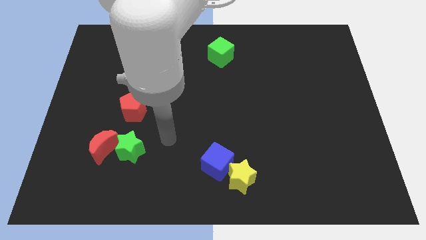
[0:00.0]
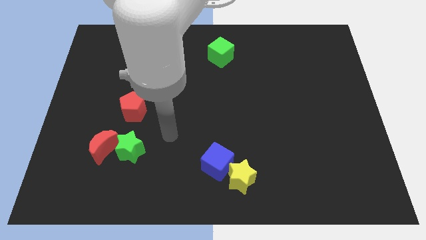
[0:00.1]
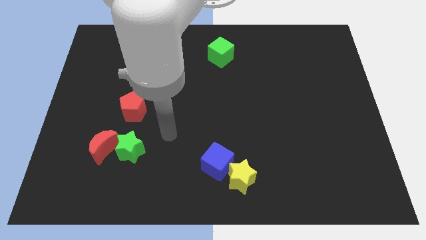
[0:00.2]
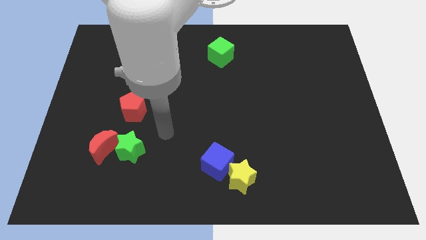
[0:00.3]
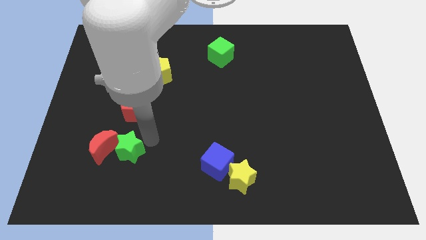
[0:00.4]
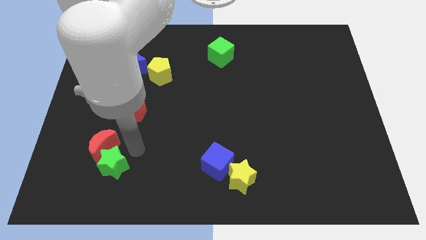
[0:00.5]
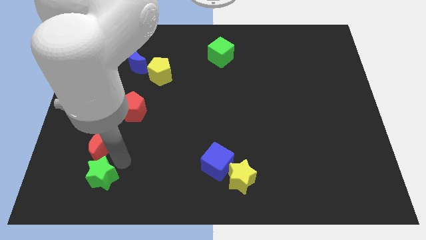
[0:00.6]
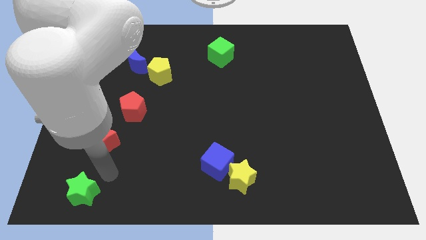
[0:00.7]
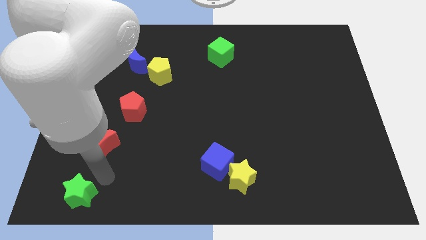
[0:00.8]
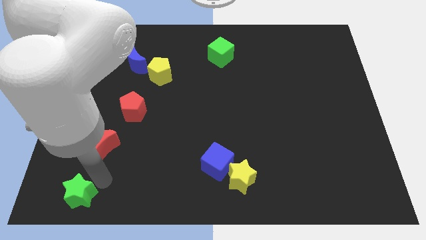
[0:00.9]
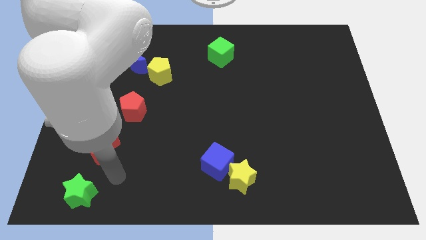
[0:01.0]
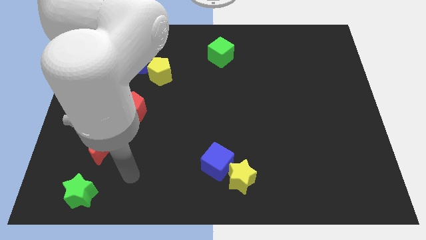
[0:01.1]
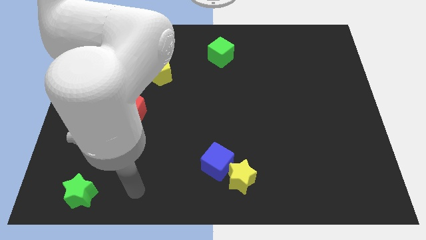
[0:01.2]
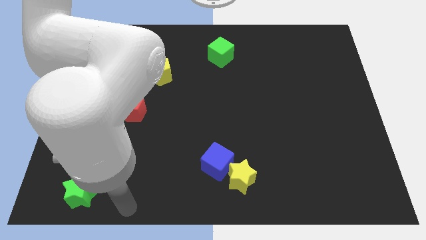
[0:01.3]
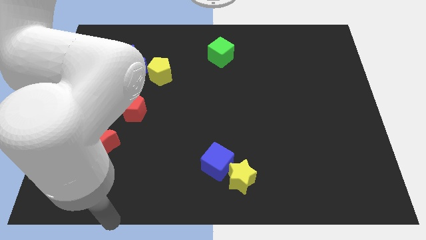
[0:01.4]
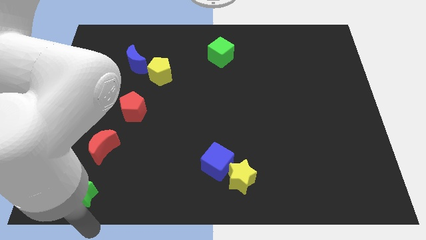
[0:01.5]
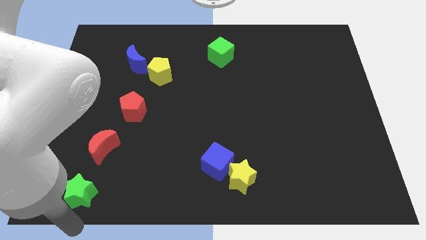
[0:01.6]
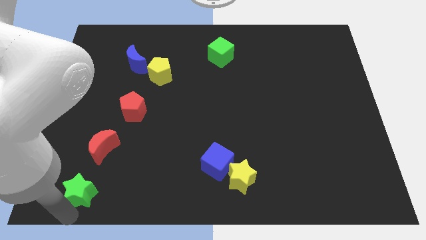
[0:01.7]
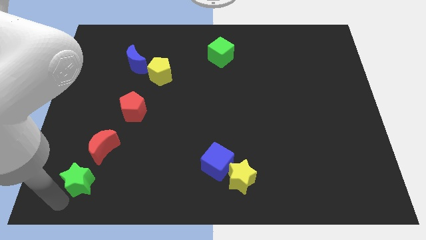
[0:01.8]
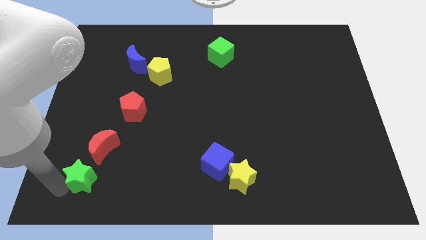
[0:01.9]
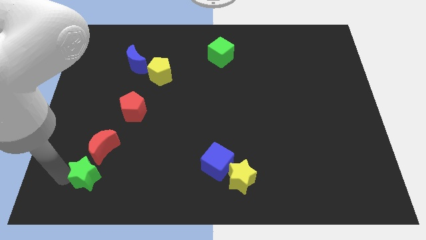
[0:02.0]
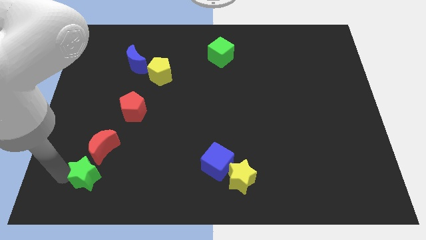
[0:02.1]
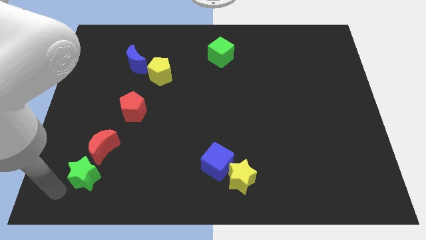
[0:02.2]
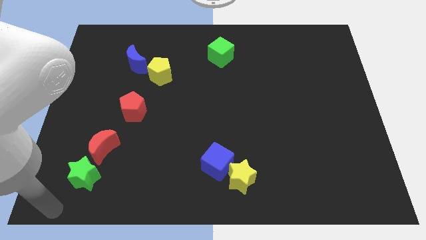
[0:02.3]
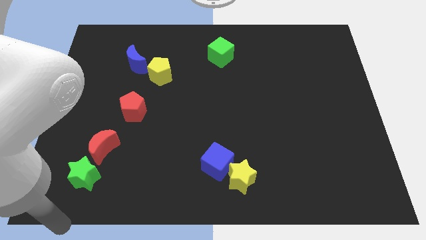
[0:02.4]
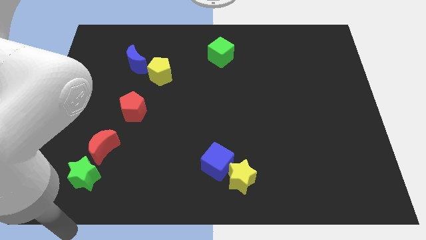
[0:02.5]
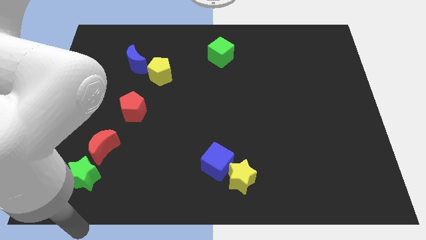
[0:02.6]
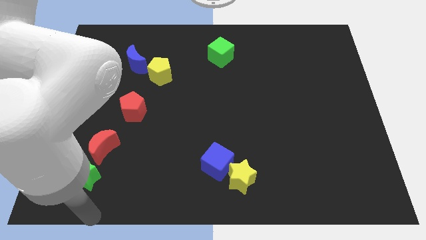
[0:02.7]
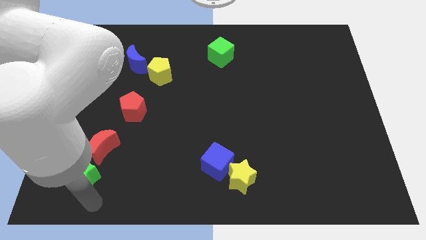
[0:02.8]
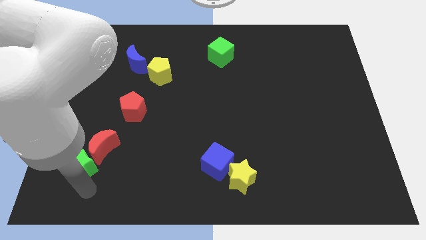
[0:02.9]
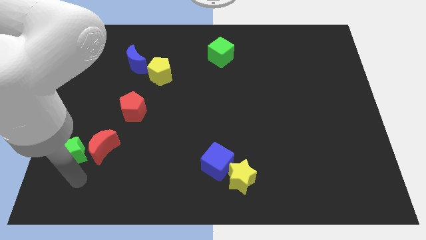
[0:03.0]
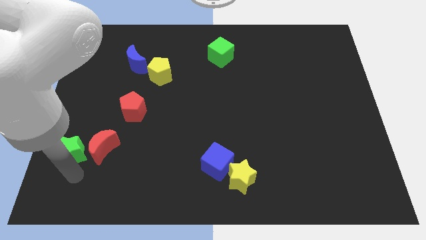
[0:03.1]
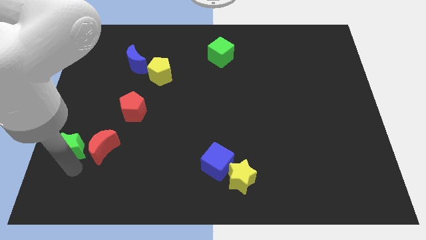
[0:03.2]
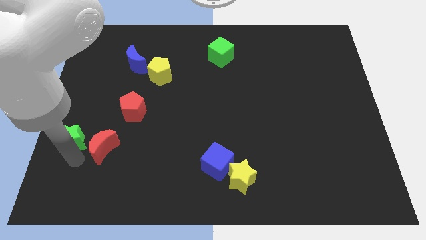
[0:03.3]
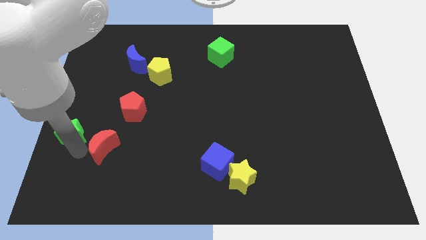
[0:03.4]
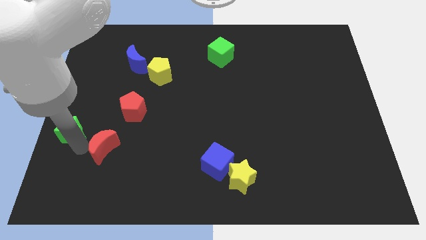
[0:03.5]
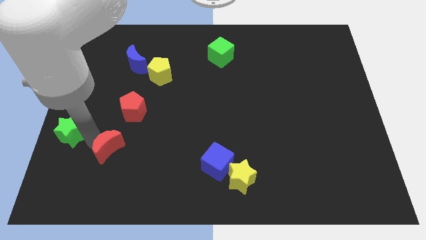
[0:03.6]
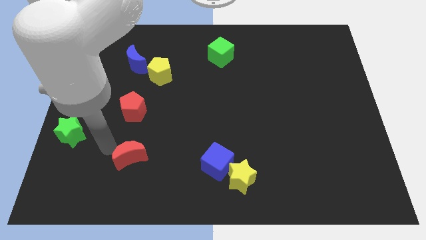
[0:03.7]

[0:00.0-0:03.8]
move green star to the left of red crescent

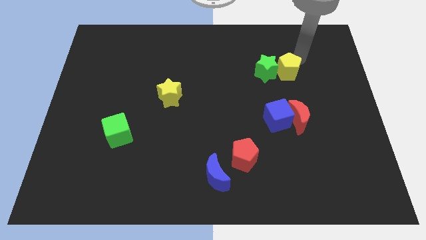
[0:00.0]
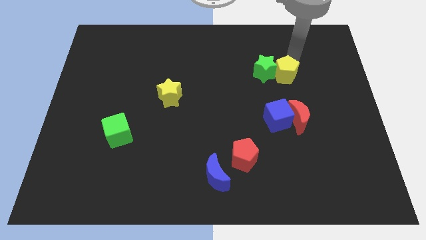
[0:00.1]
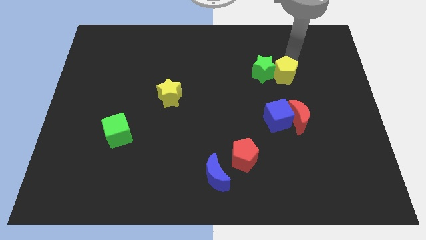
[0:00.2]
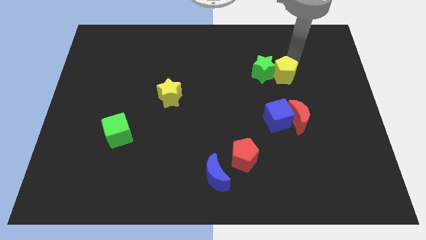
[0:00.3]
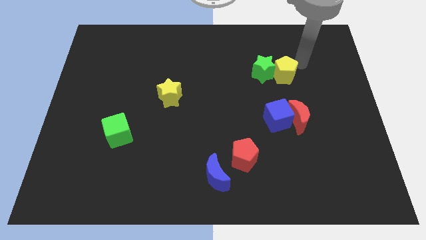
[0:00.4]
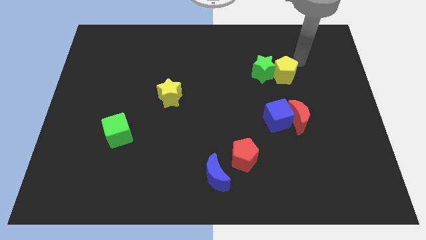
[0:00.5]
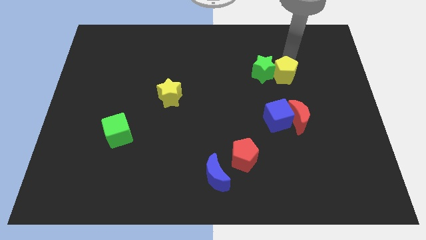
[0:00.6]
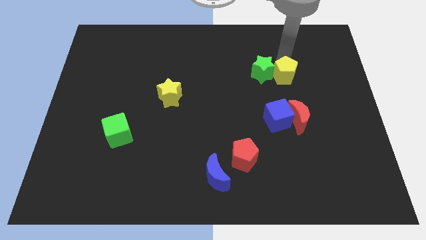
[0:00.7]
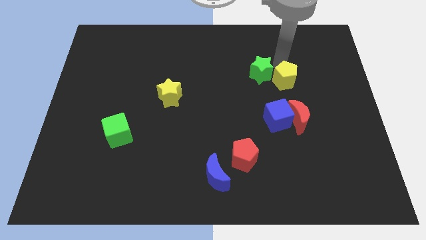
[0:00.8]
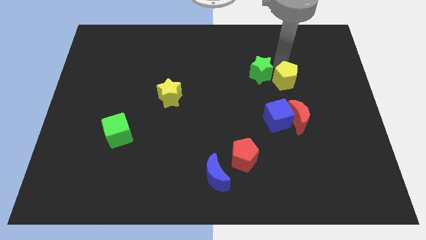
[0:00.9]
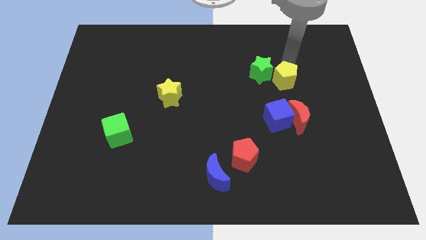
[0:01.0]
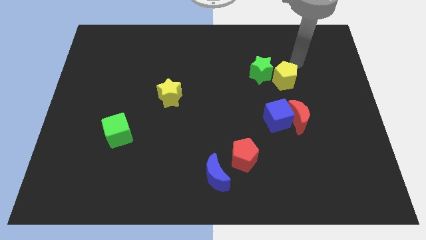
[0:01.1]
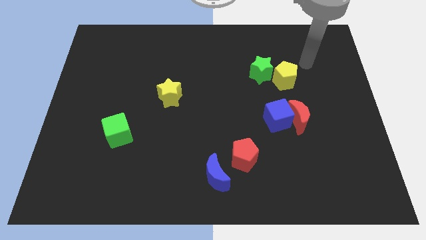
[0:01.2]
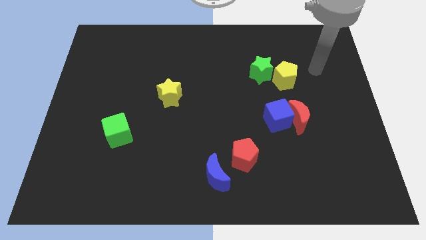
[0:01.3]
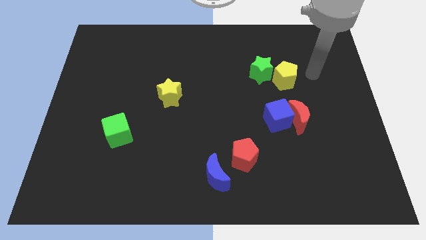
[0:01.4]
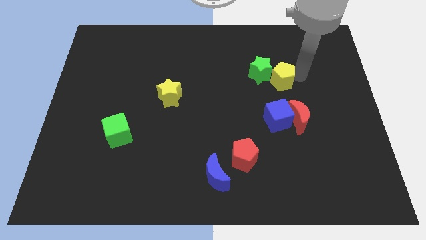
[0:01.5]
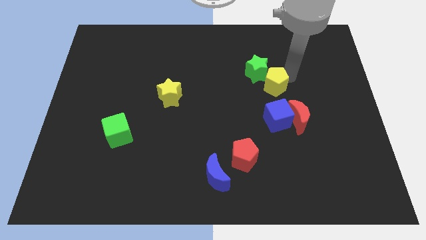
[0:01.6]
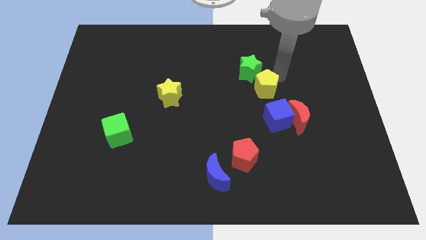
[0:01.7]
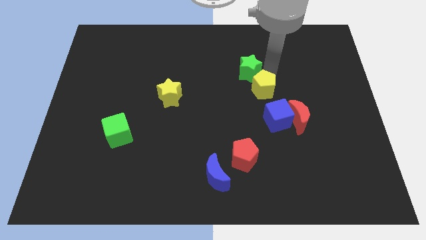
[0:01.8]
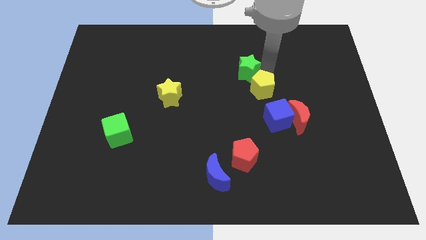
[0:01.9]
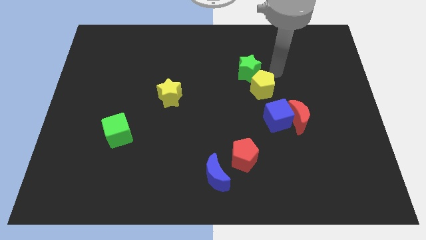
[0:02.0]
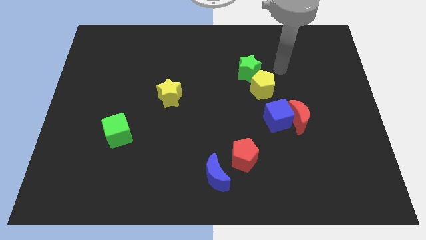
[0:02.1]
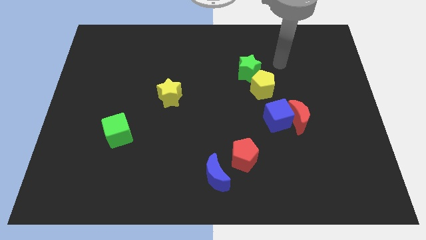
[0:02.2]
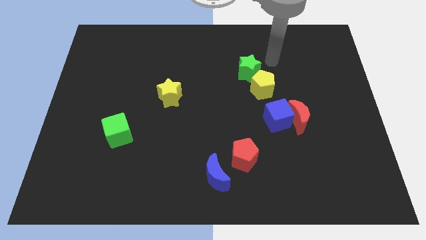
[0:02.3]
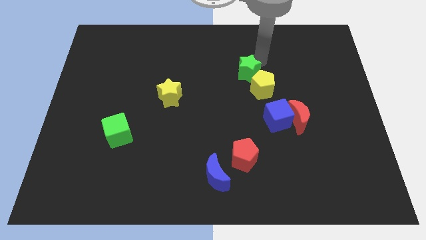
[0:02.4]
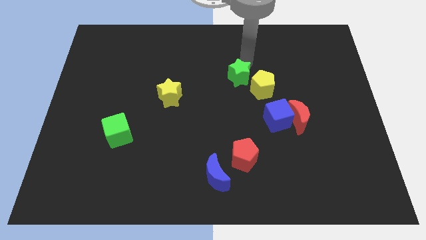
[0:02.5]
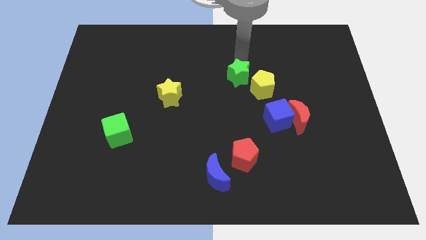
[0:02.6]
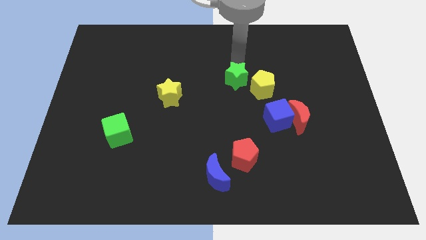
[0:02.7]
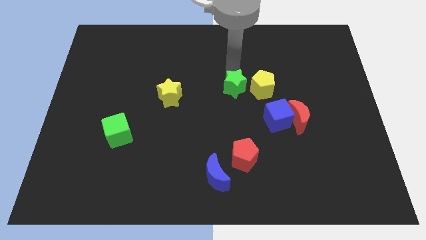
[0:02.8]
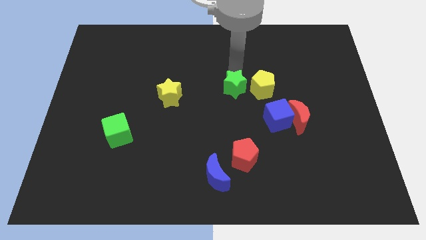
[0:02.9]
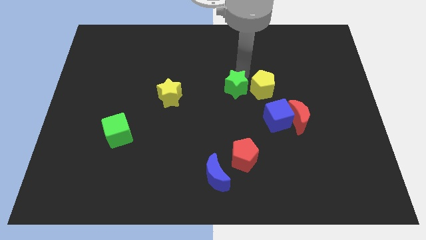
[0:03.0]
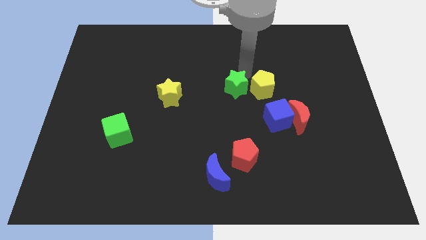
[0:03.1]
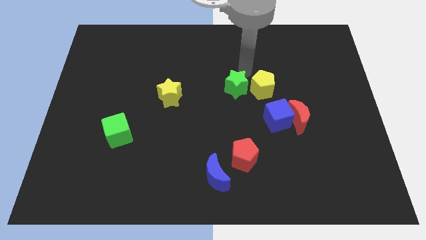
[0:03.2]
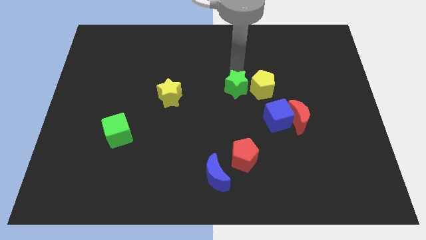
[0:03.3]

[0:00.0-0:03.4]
push the yellow pentagon and green star to the top left side of the blue cube

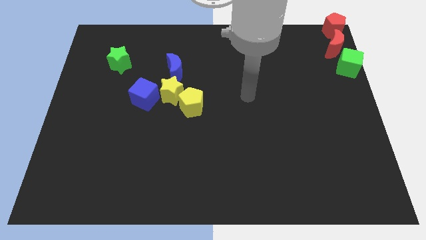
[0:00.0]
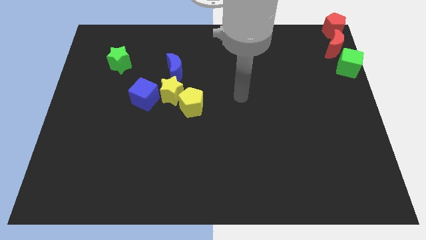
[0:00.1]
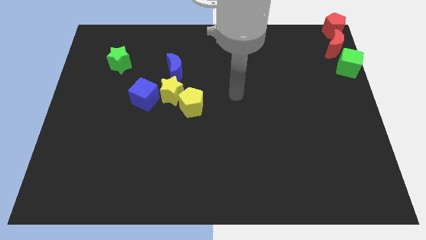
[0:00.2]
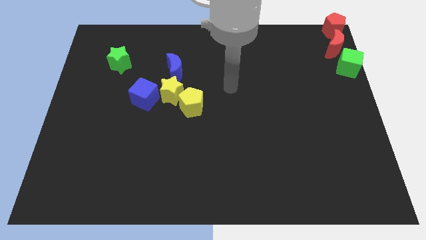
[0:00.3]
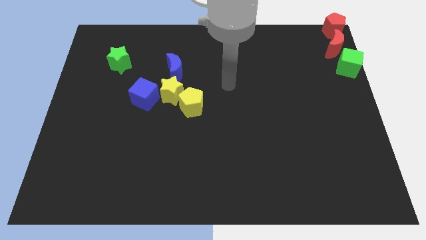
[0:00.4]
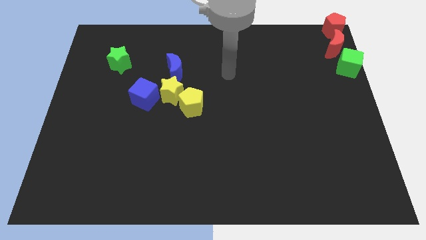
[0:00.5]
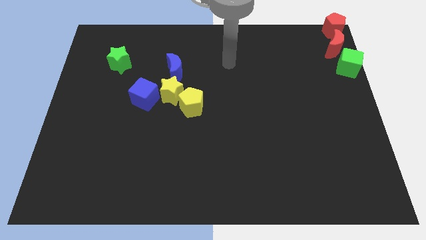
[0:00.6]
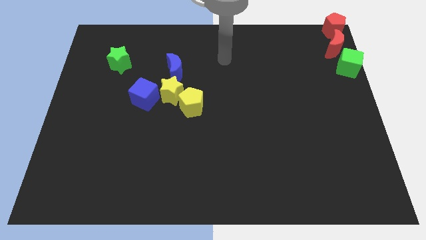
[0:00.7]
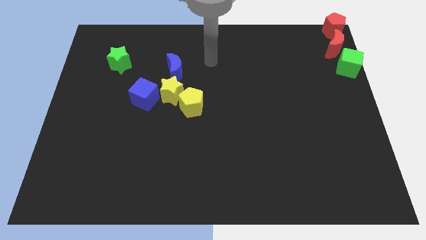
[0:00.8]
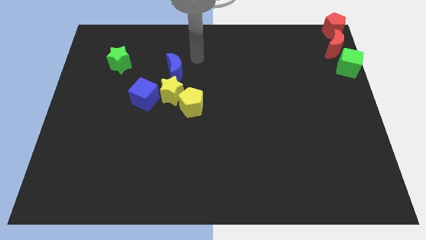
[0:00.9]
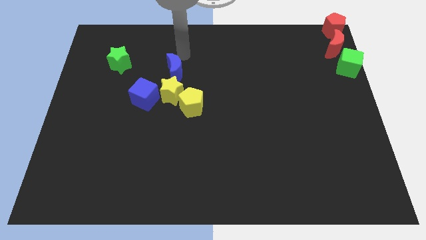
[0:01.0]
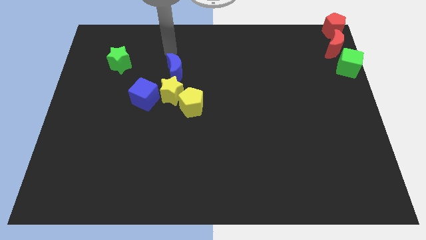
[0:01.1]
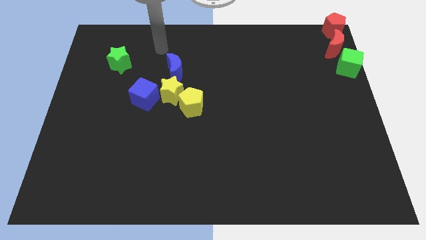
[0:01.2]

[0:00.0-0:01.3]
place the arm above the blue moon

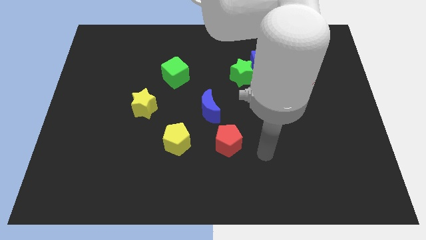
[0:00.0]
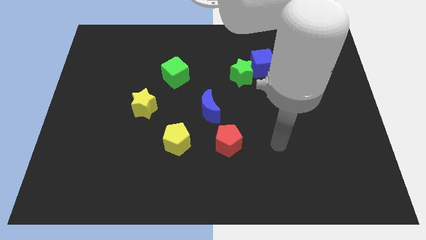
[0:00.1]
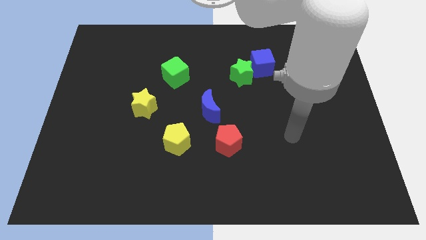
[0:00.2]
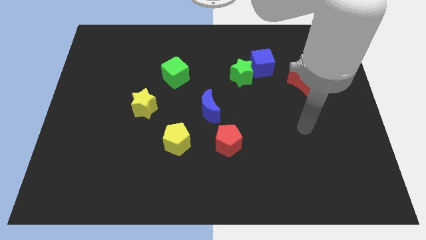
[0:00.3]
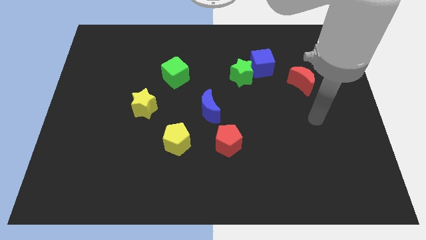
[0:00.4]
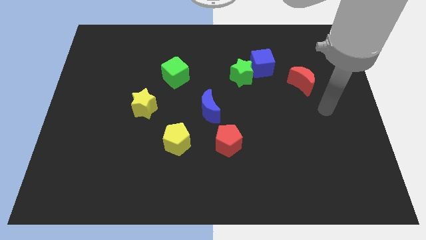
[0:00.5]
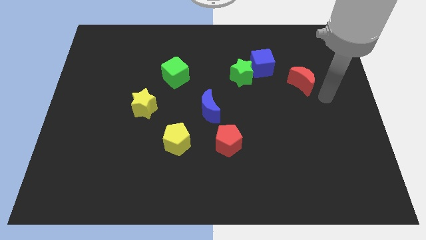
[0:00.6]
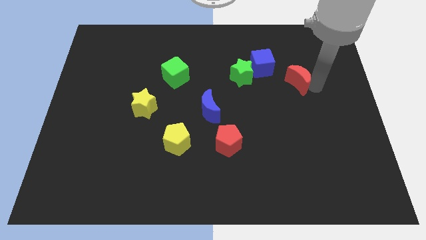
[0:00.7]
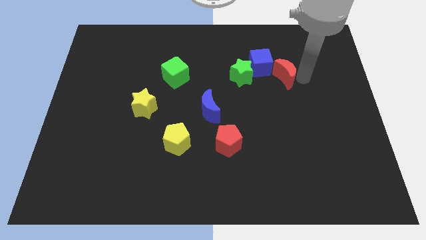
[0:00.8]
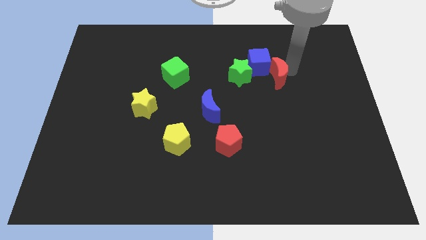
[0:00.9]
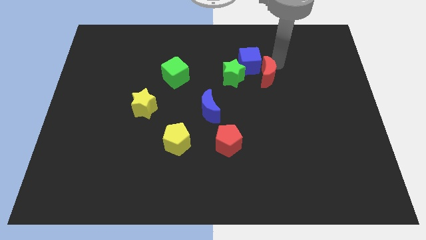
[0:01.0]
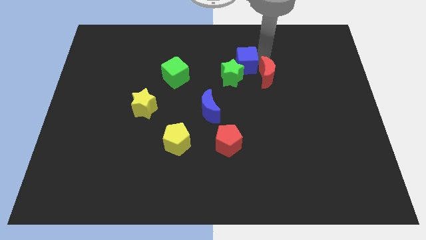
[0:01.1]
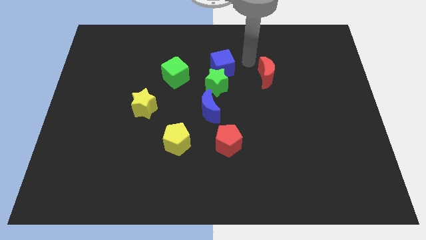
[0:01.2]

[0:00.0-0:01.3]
push red crescent towards blue cube
